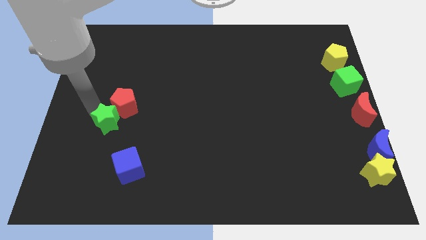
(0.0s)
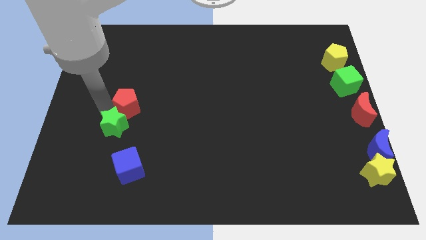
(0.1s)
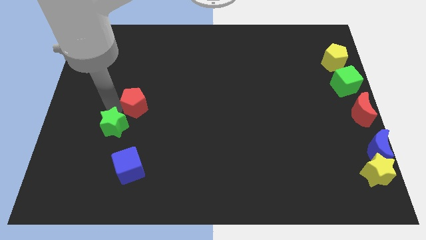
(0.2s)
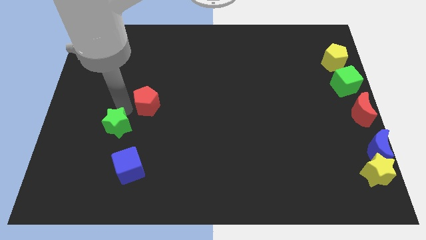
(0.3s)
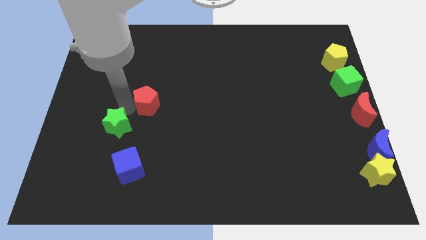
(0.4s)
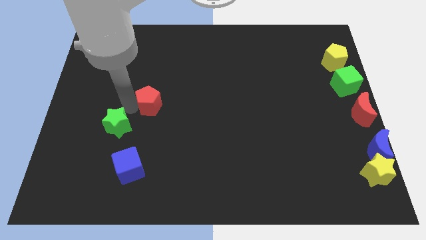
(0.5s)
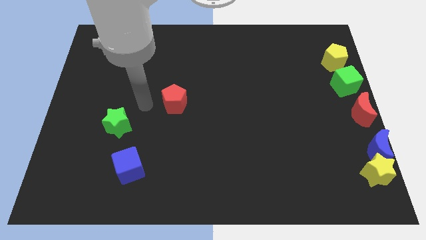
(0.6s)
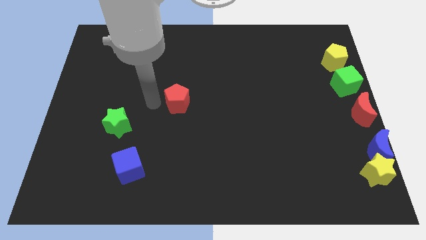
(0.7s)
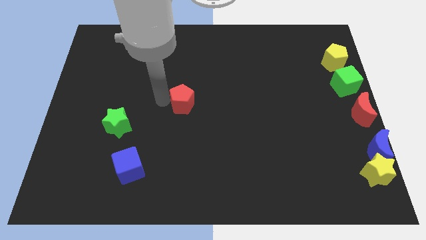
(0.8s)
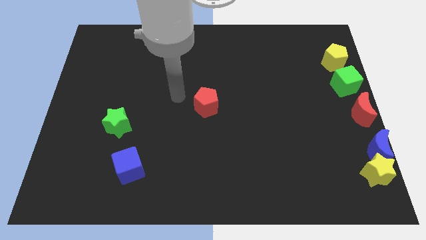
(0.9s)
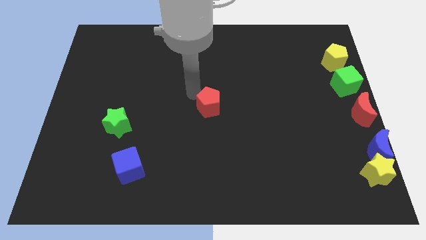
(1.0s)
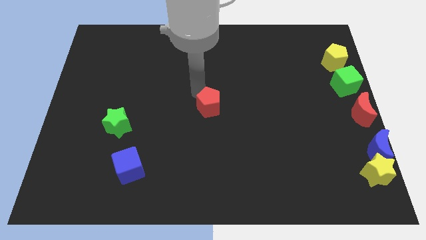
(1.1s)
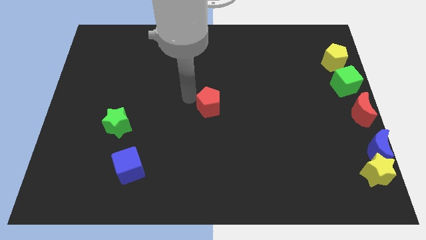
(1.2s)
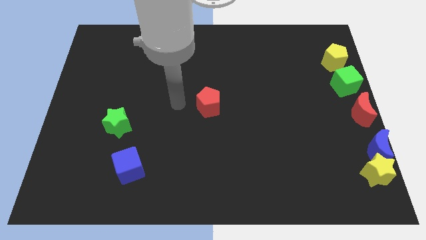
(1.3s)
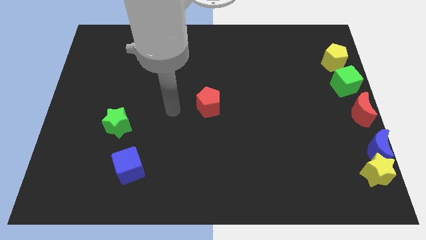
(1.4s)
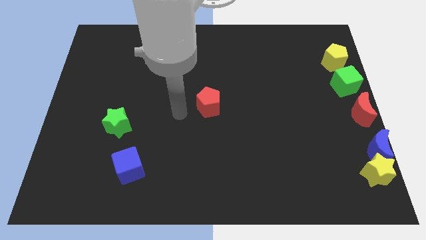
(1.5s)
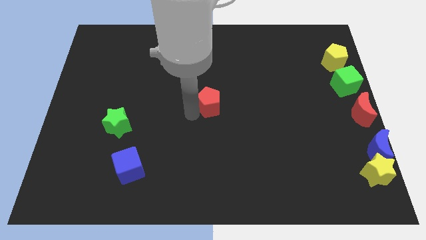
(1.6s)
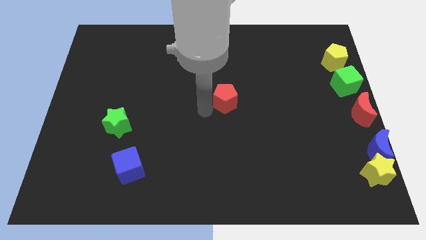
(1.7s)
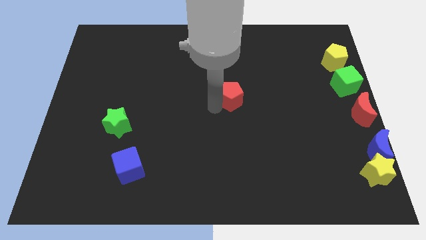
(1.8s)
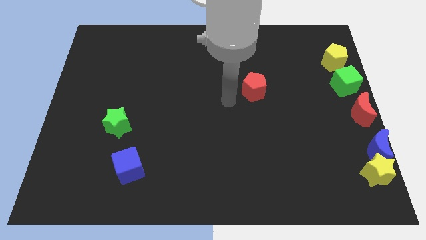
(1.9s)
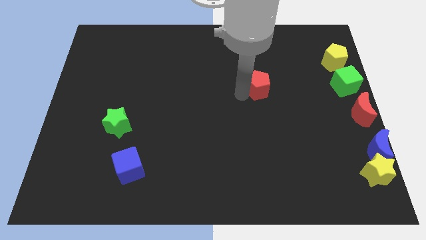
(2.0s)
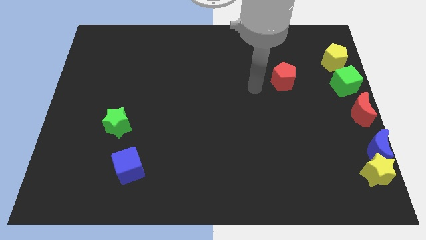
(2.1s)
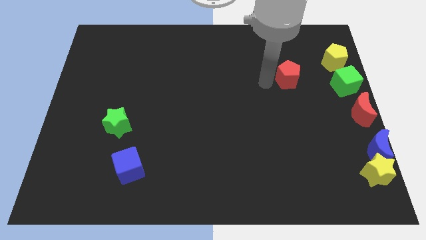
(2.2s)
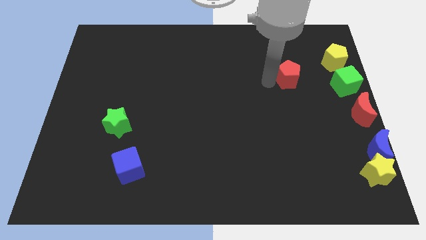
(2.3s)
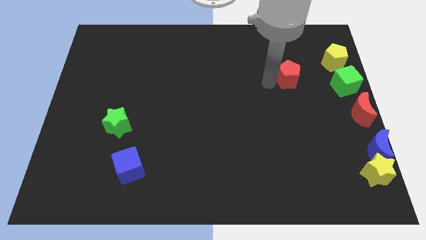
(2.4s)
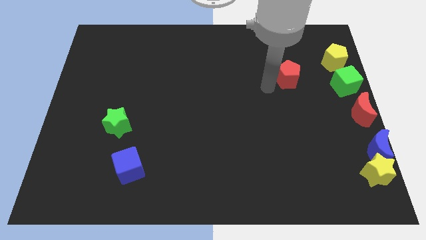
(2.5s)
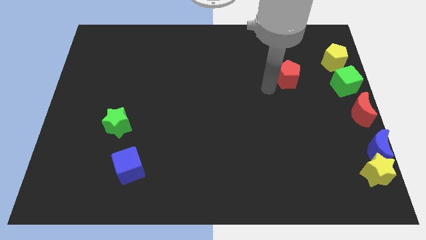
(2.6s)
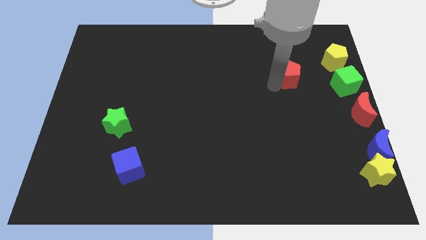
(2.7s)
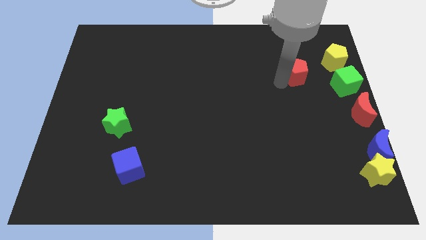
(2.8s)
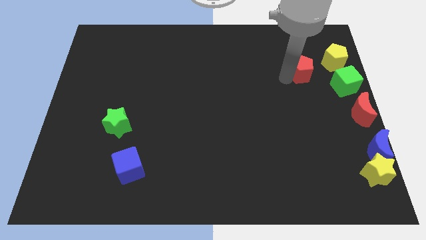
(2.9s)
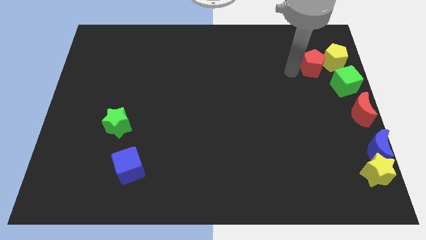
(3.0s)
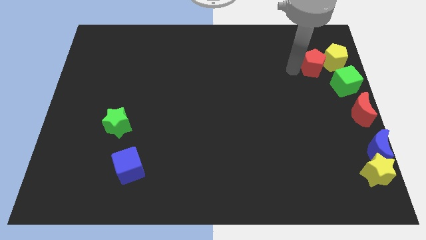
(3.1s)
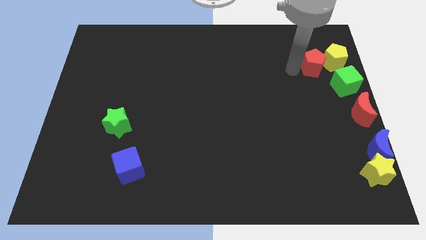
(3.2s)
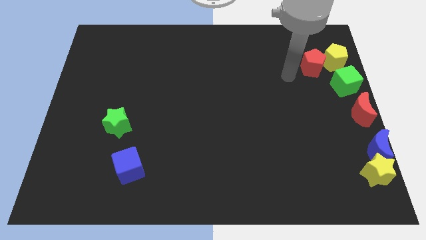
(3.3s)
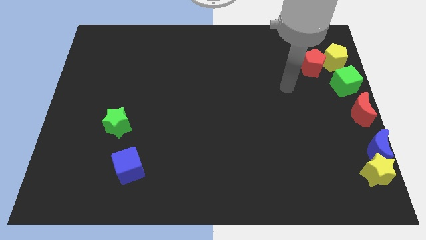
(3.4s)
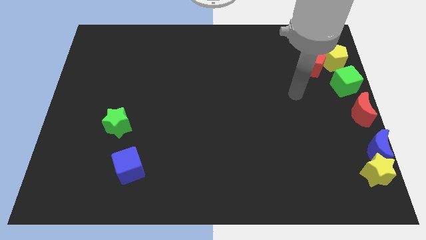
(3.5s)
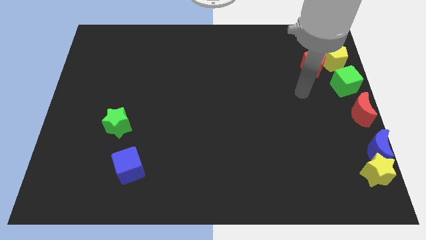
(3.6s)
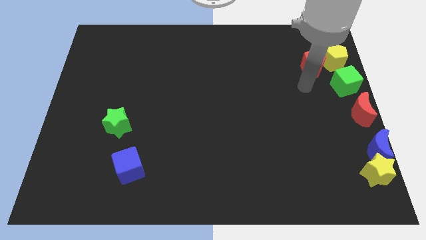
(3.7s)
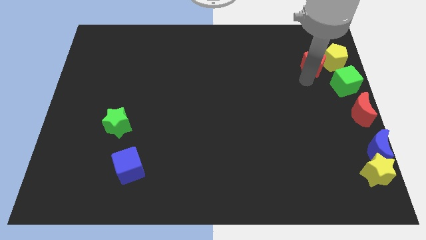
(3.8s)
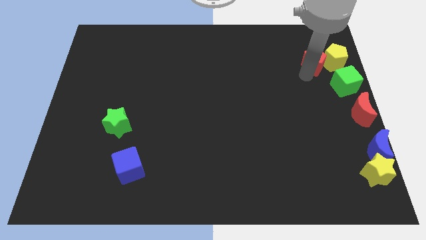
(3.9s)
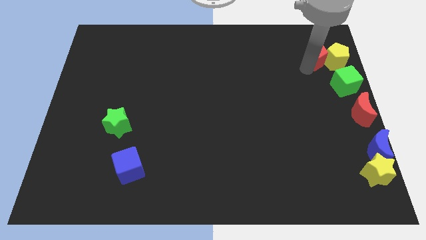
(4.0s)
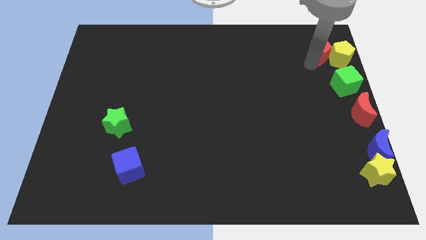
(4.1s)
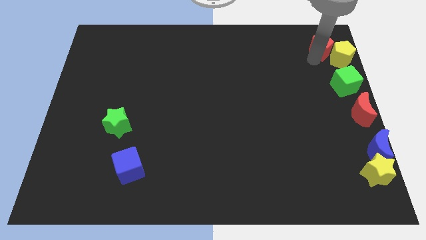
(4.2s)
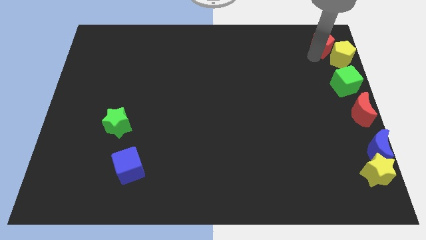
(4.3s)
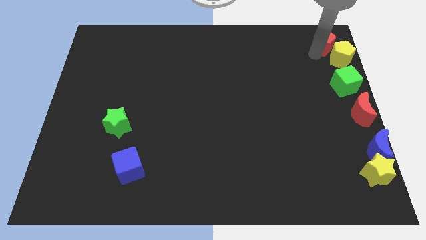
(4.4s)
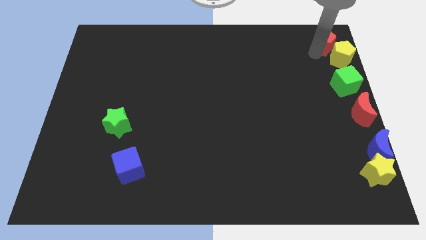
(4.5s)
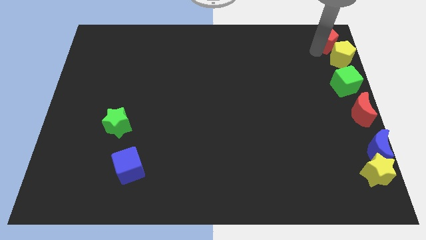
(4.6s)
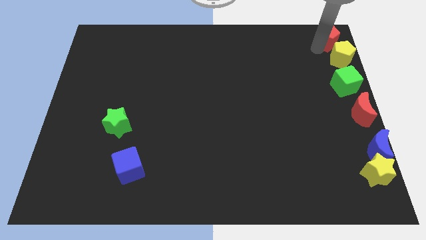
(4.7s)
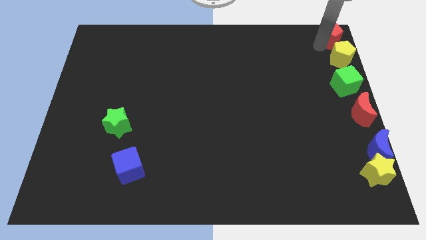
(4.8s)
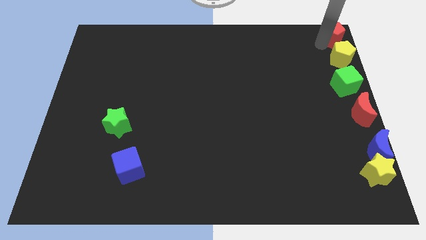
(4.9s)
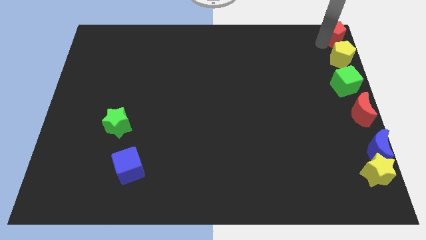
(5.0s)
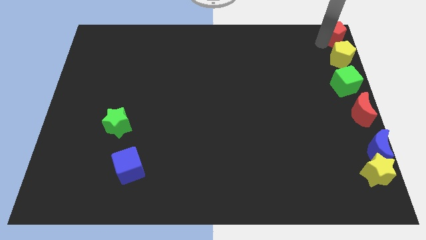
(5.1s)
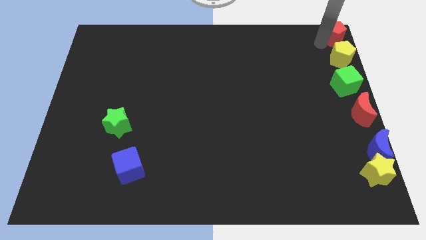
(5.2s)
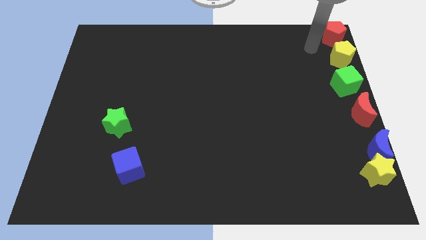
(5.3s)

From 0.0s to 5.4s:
push the red pentagon to the top right corner

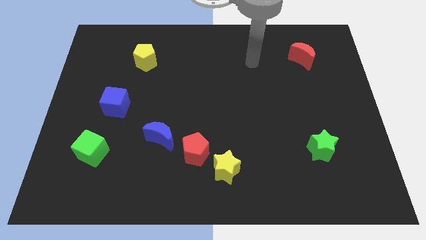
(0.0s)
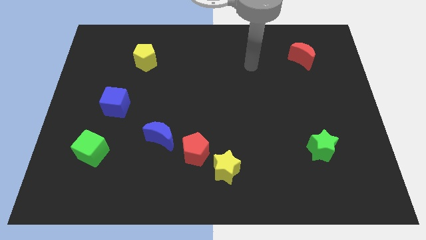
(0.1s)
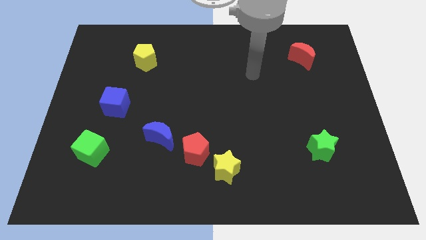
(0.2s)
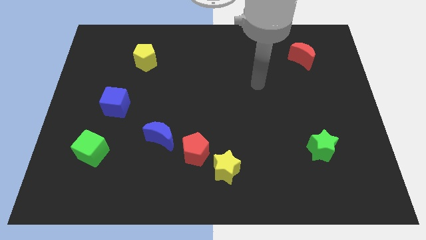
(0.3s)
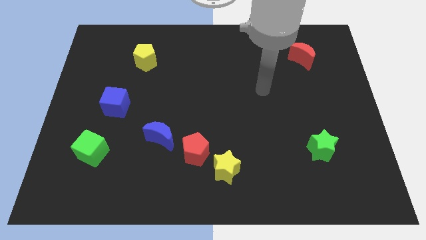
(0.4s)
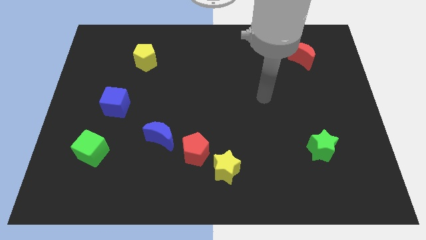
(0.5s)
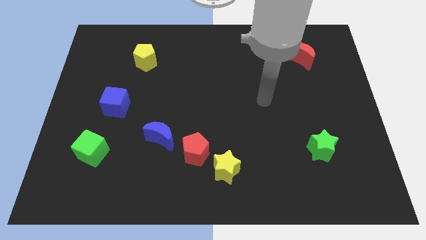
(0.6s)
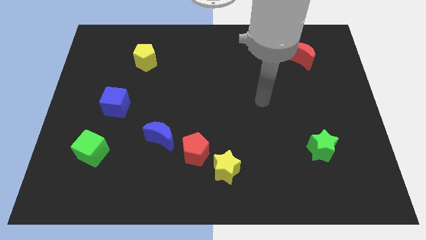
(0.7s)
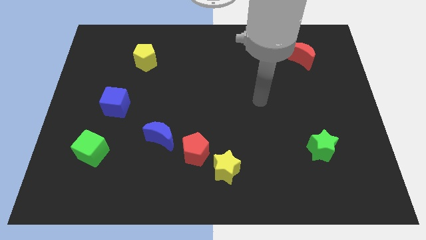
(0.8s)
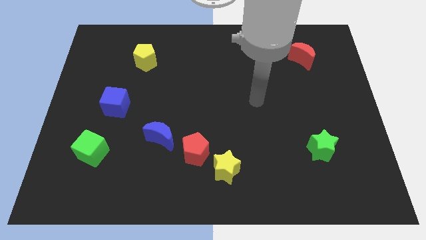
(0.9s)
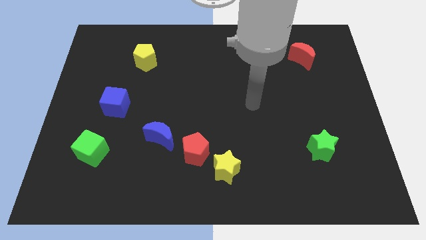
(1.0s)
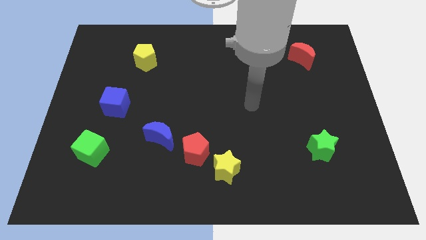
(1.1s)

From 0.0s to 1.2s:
move arm at center

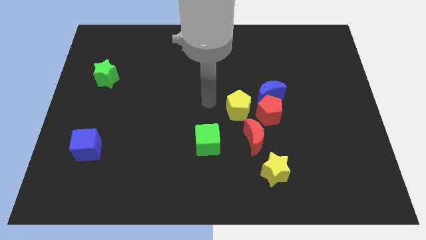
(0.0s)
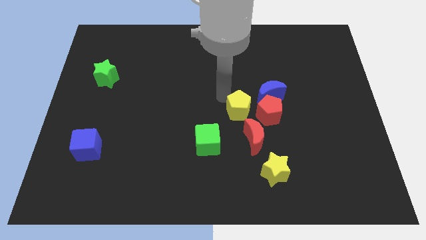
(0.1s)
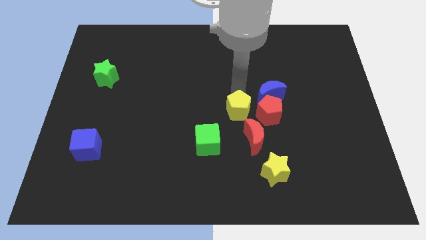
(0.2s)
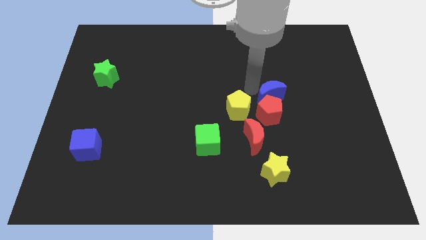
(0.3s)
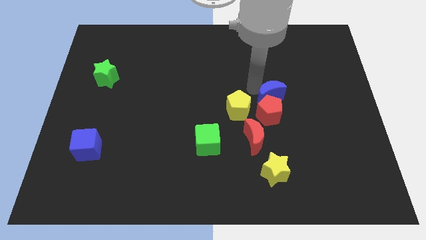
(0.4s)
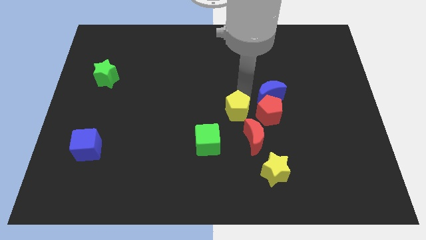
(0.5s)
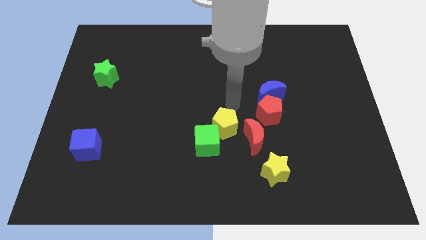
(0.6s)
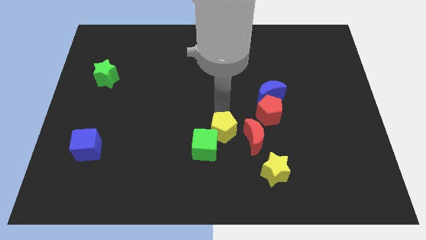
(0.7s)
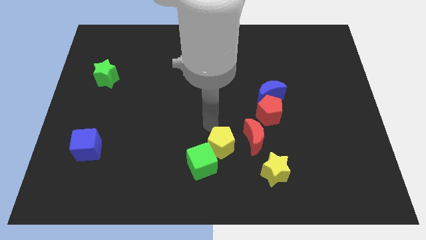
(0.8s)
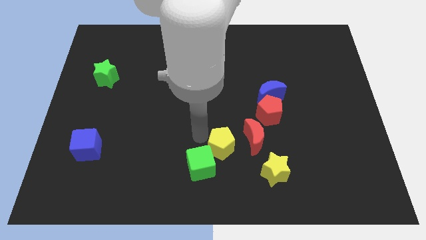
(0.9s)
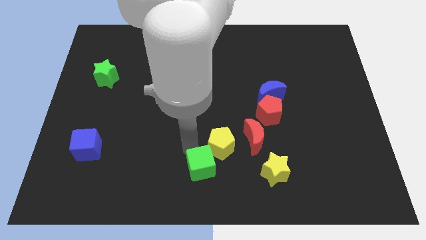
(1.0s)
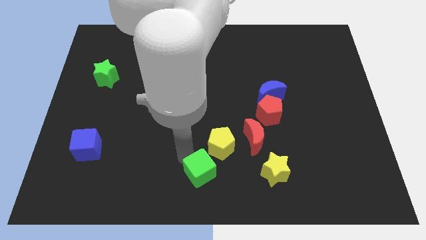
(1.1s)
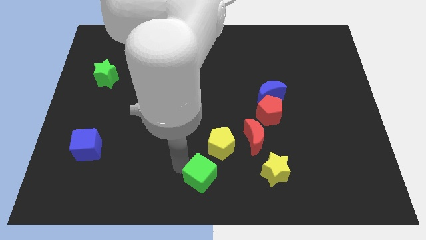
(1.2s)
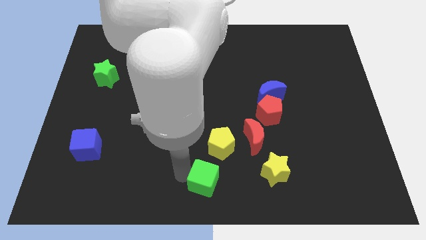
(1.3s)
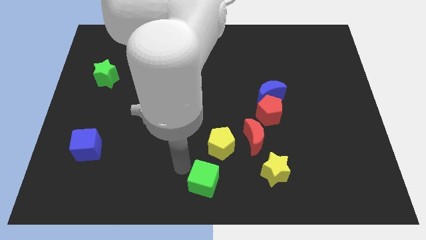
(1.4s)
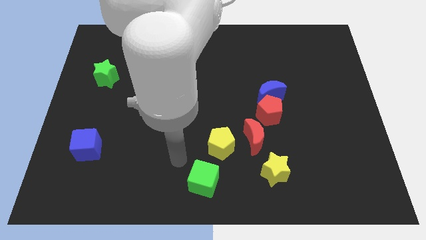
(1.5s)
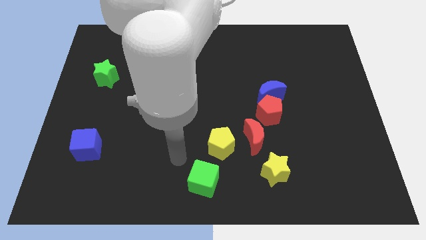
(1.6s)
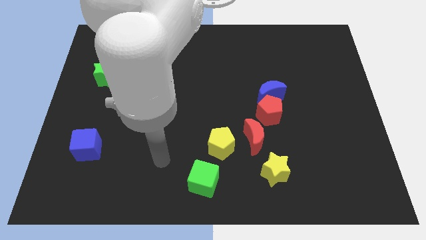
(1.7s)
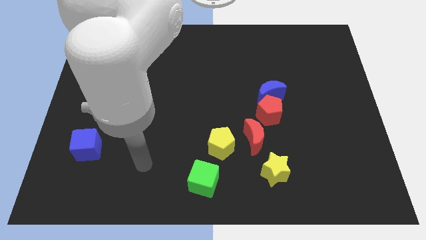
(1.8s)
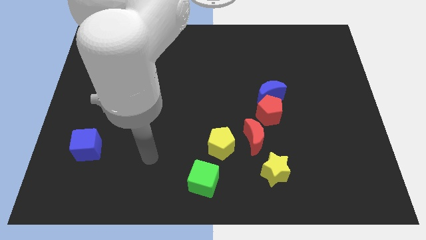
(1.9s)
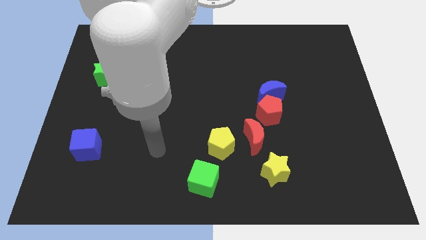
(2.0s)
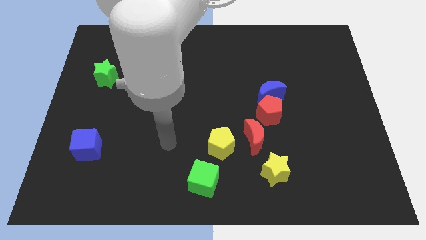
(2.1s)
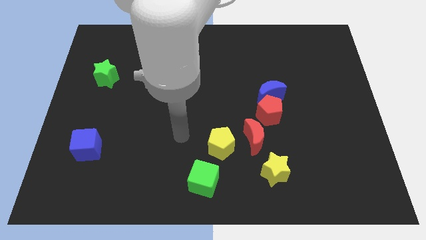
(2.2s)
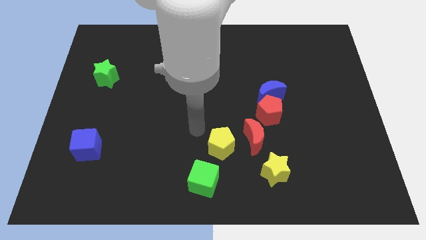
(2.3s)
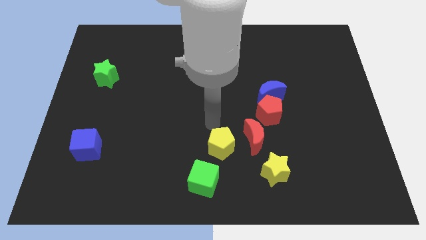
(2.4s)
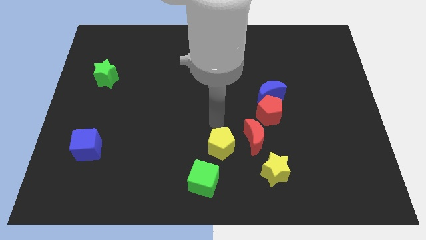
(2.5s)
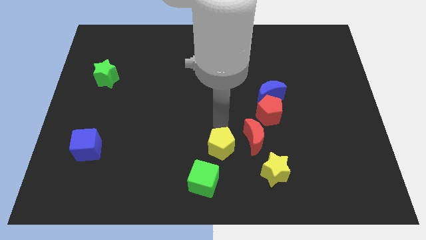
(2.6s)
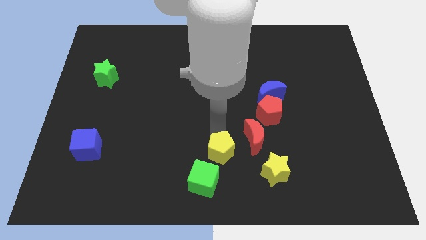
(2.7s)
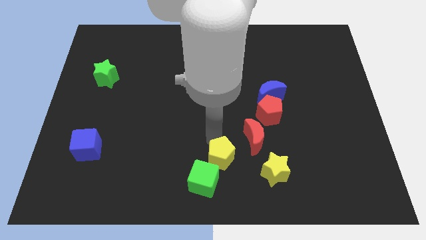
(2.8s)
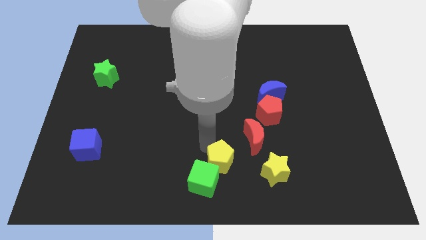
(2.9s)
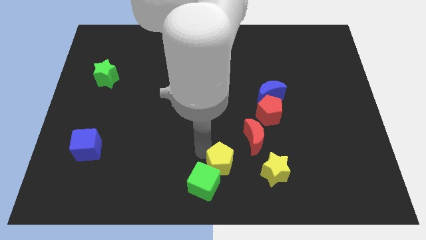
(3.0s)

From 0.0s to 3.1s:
place the green cube at the bottom center
